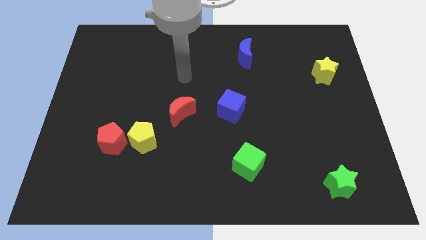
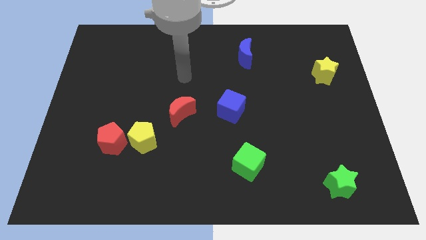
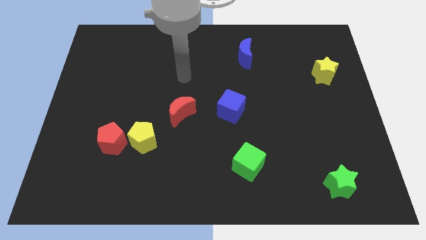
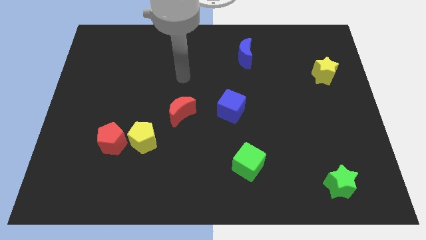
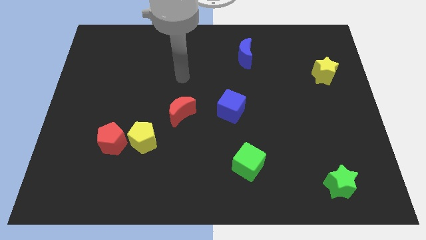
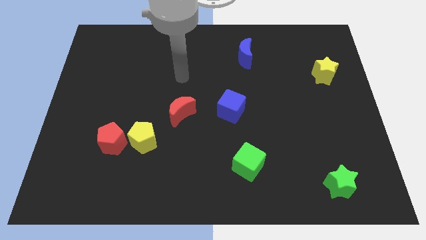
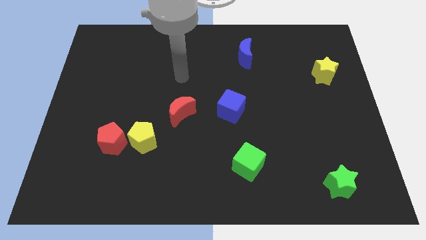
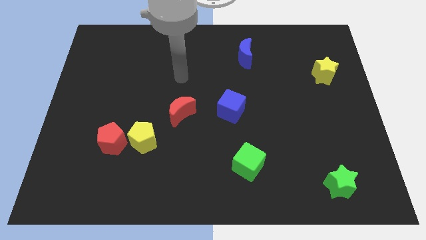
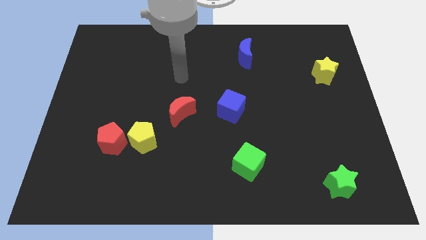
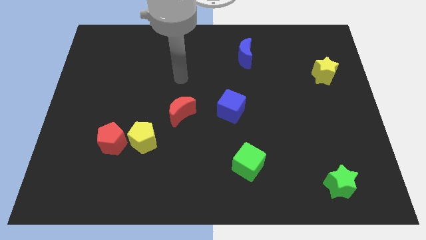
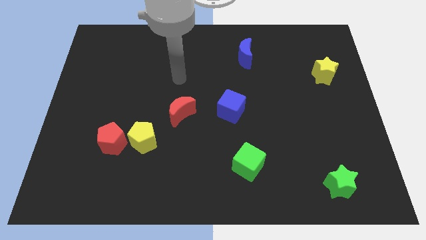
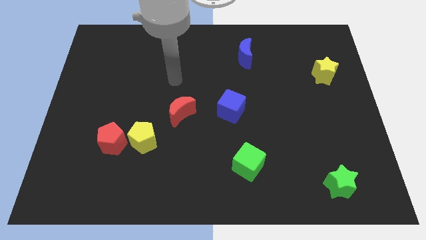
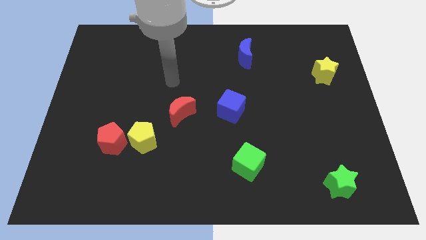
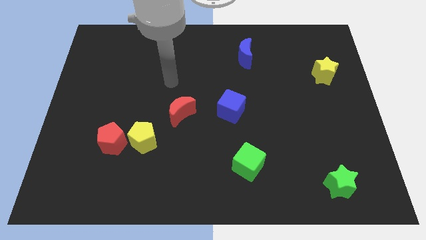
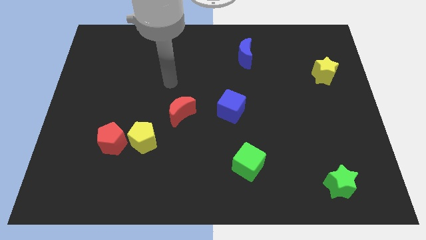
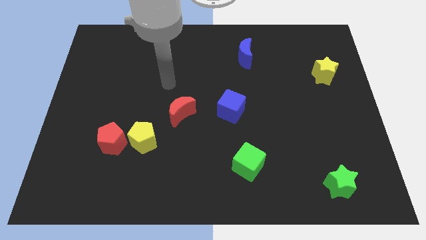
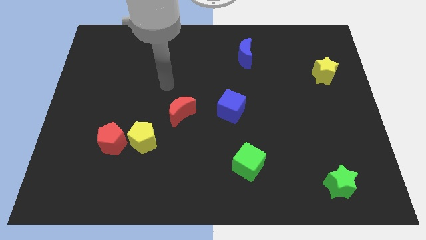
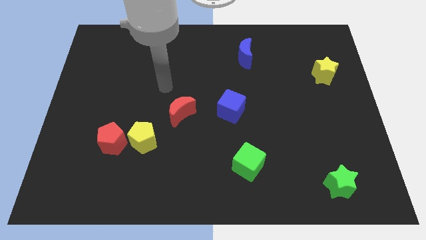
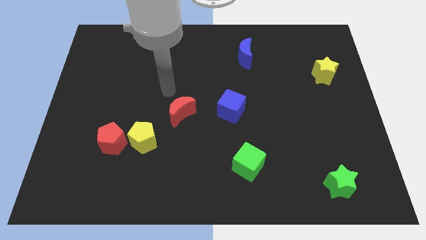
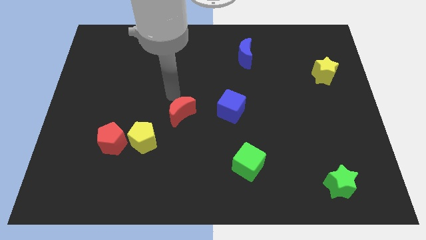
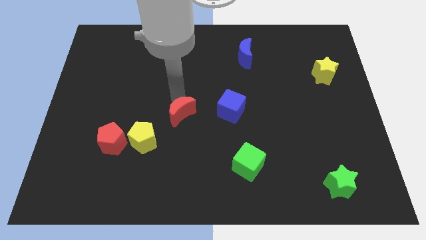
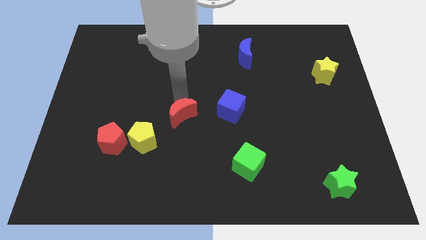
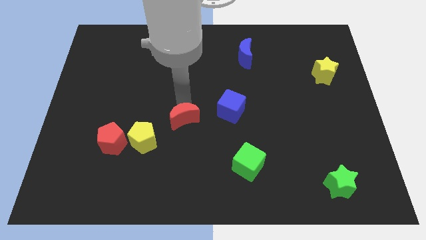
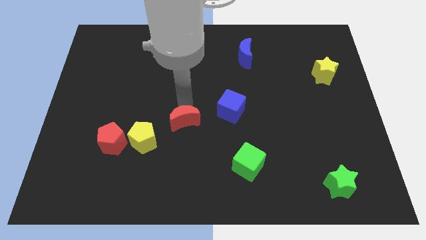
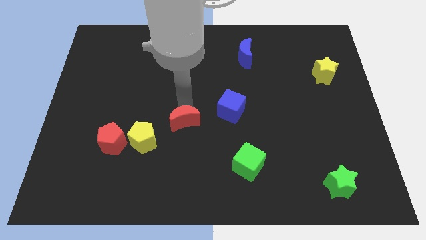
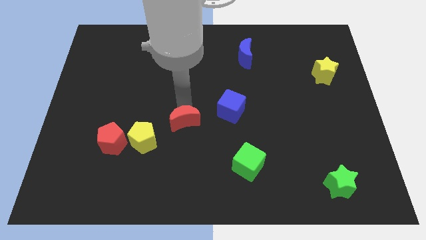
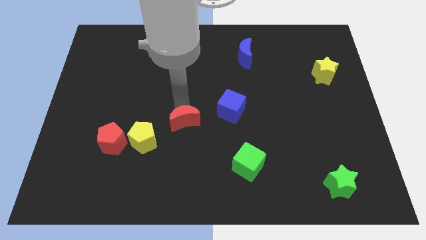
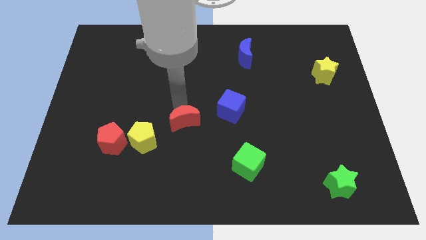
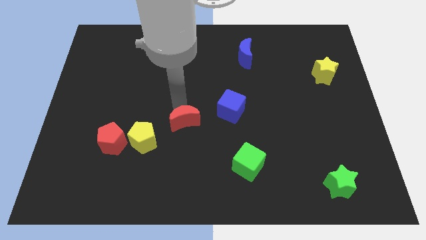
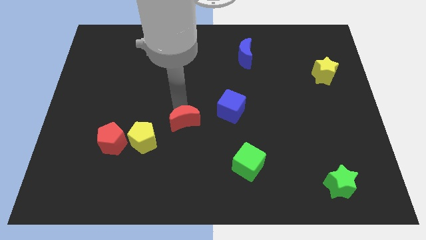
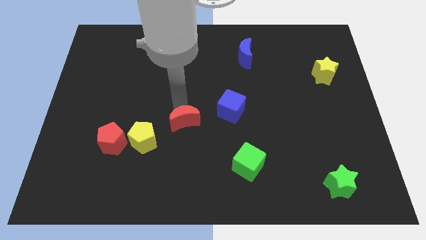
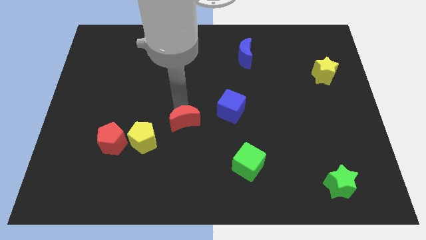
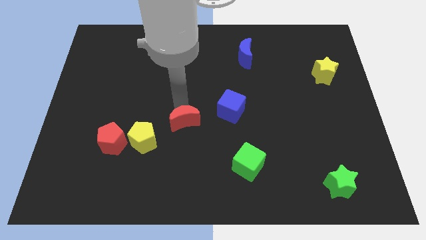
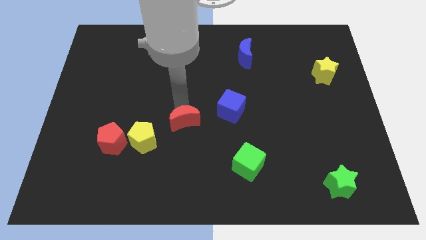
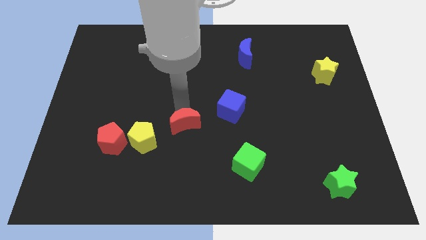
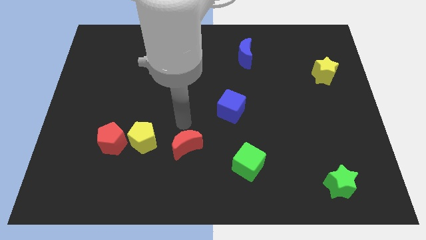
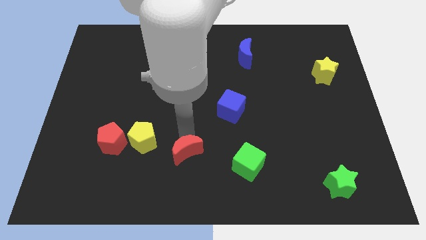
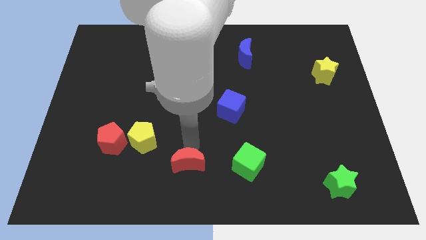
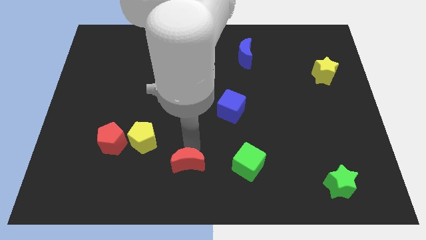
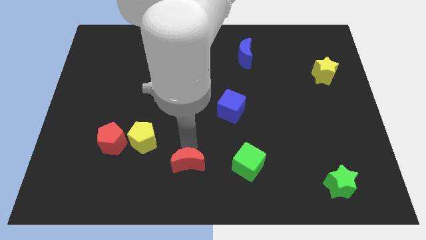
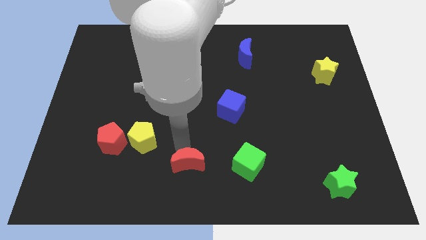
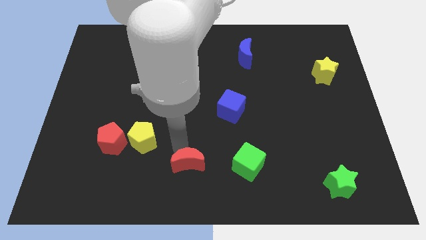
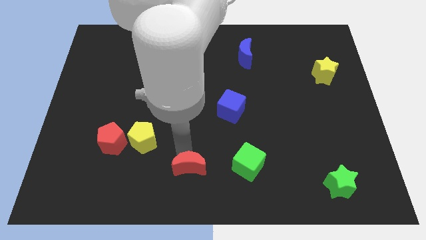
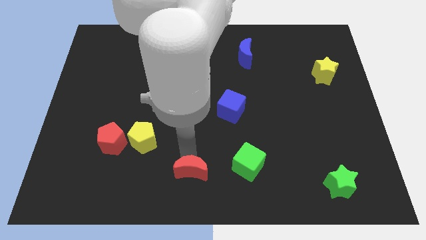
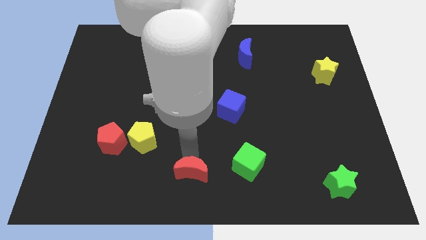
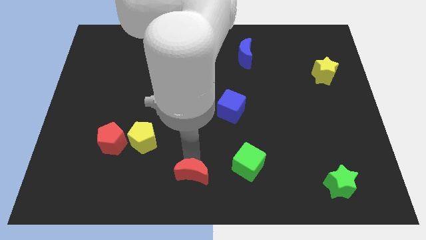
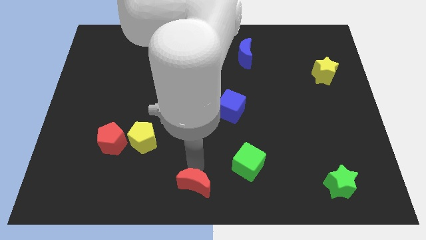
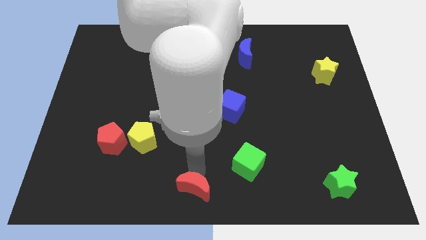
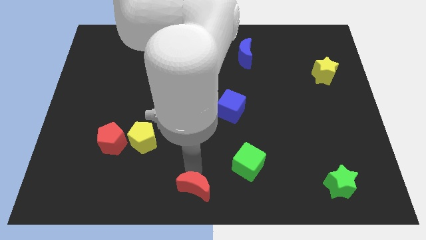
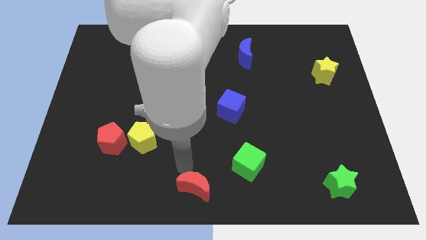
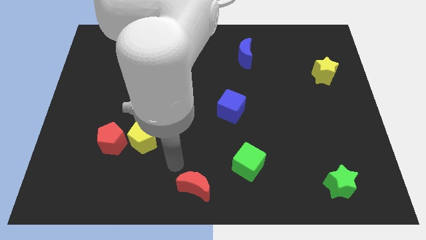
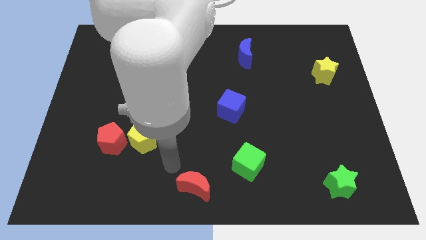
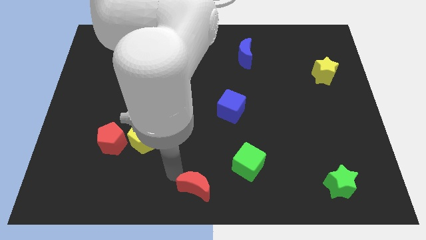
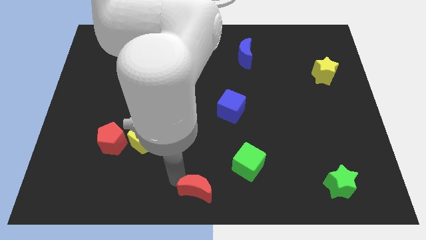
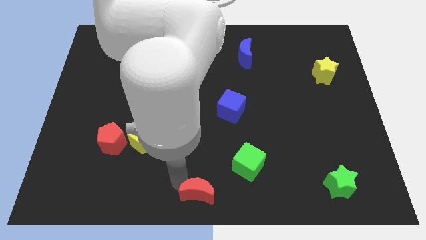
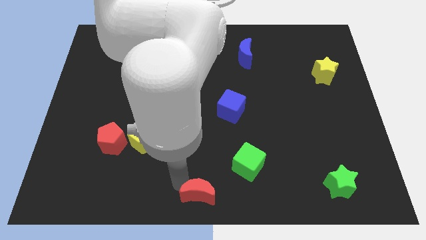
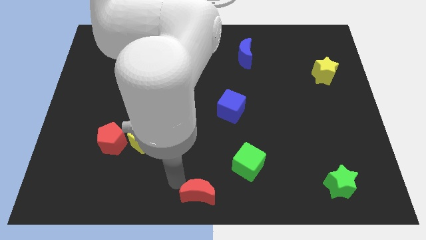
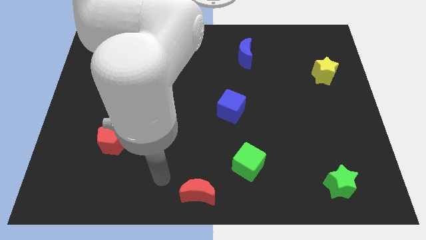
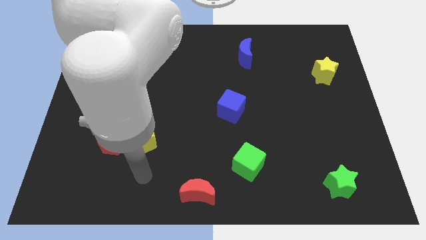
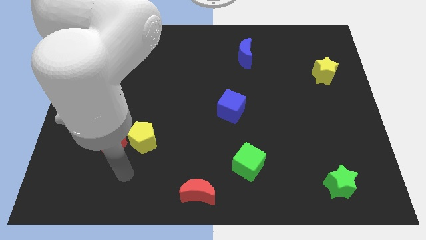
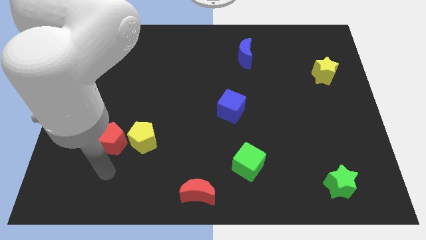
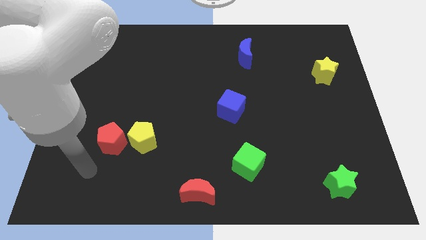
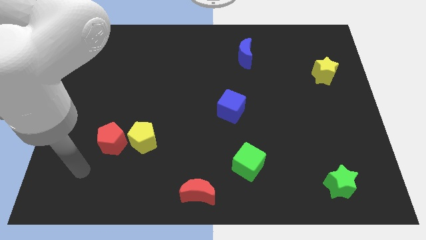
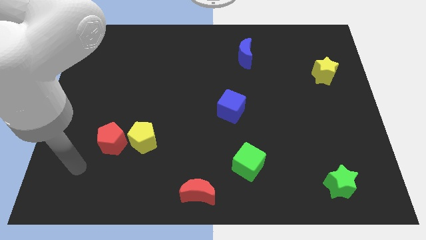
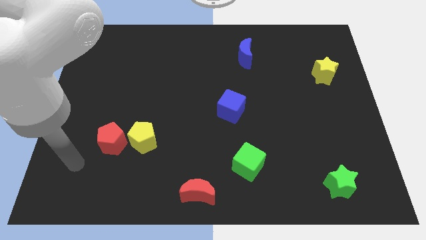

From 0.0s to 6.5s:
move the red moon to the bottom center

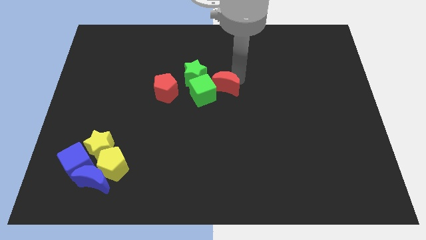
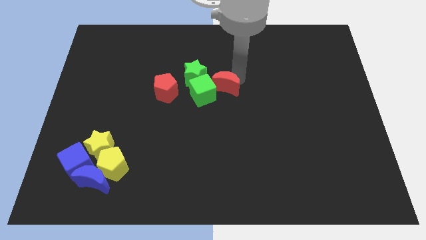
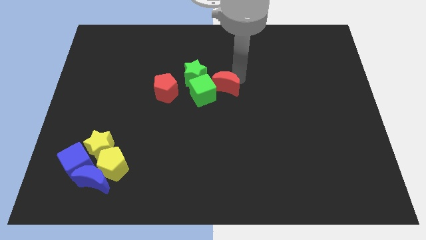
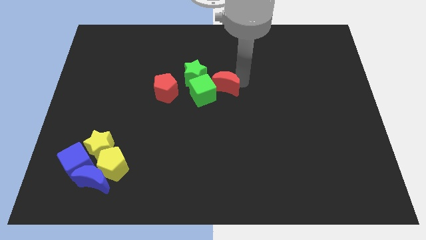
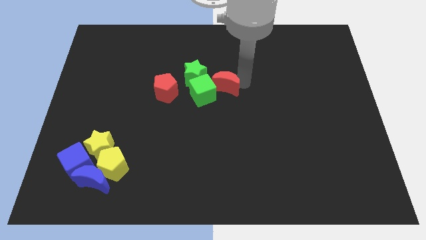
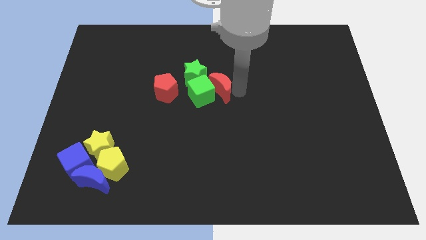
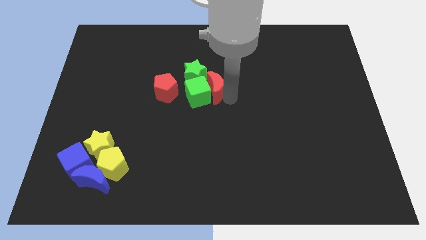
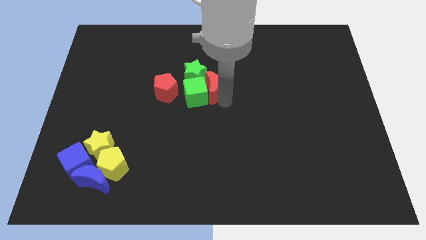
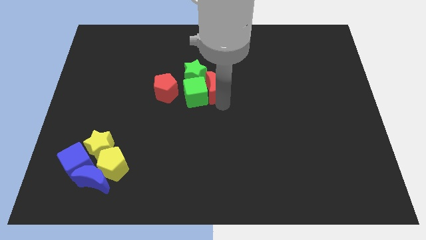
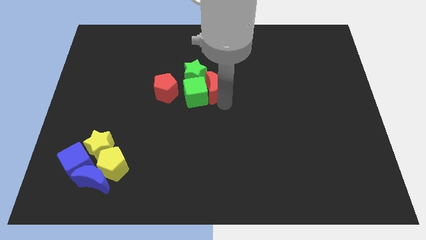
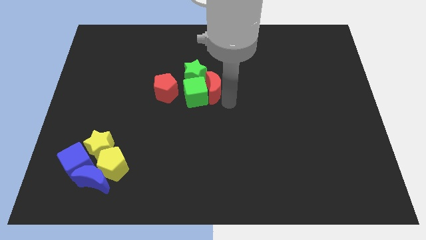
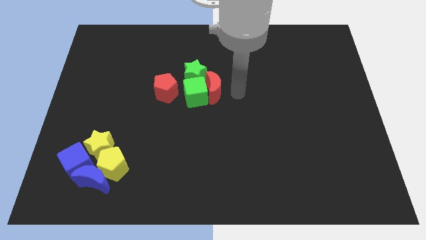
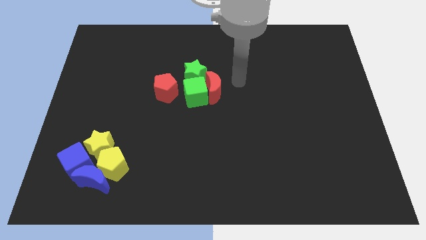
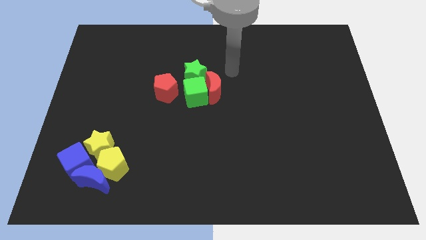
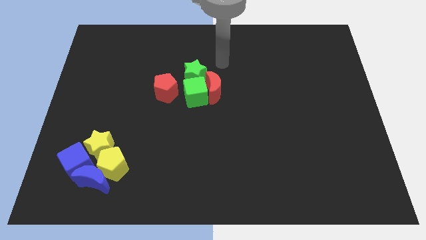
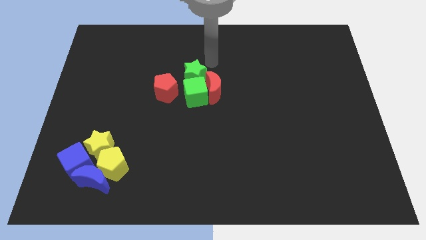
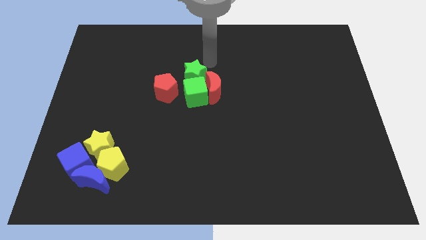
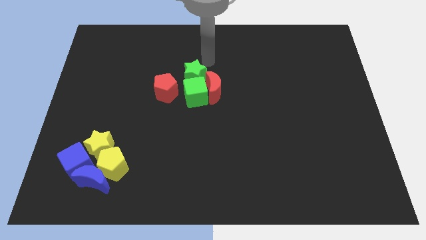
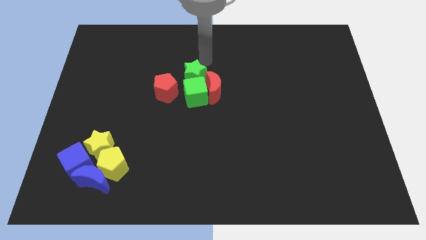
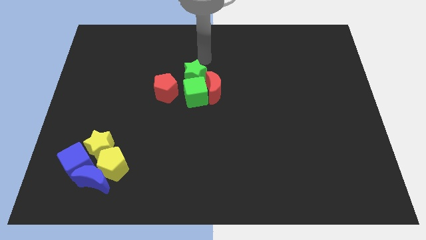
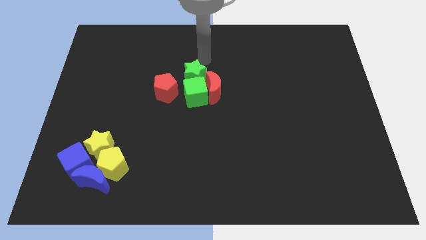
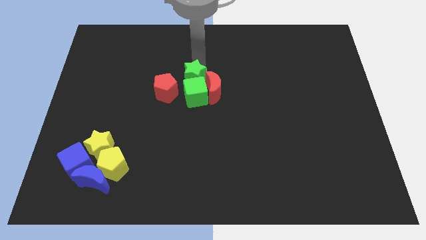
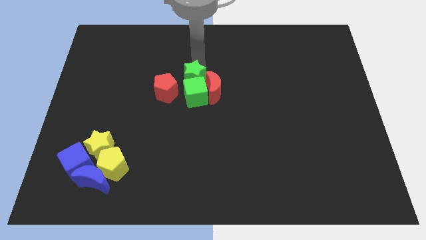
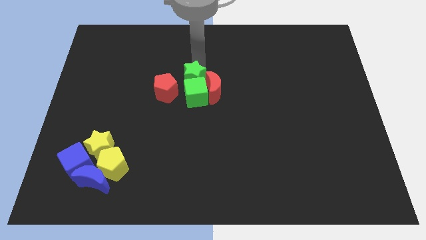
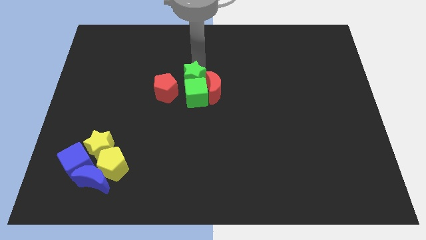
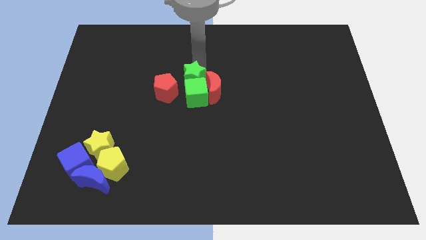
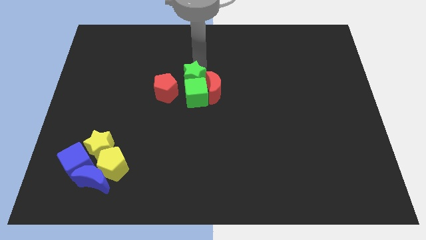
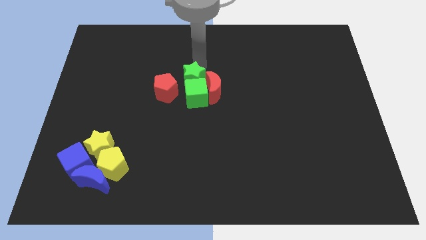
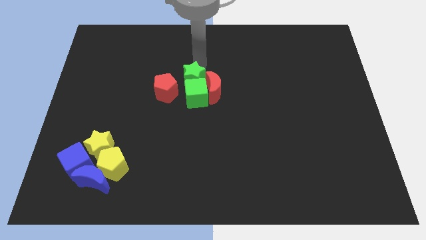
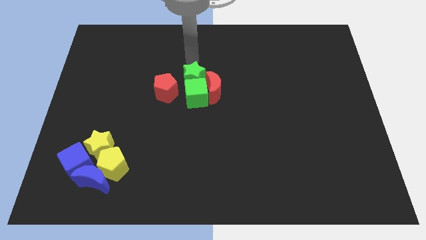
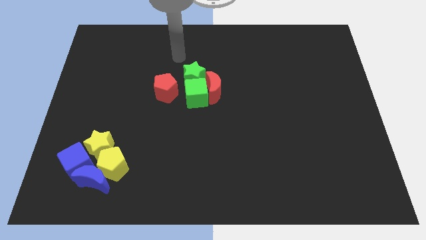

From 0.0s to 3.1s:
move red moon into green cube
